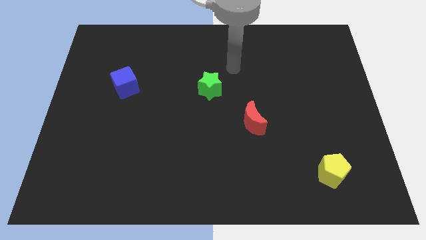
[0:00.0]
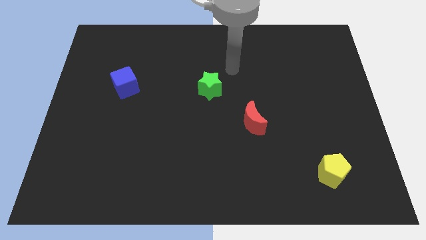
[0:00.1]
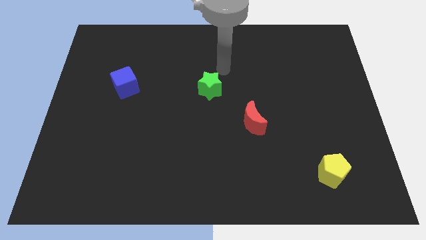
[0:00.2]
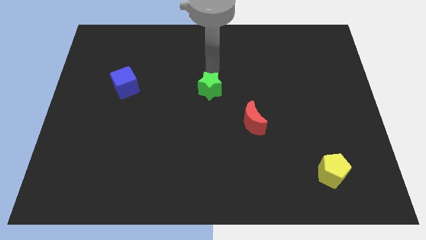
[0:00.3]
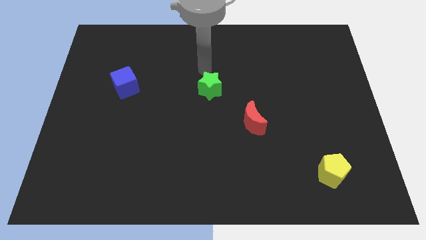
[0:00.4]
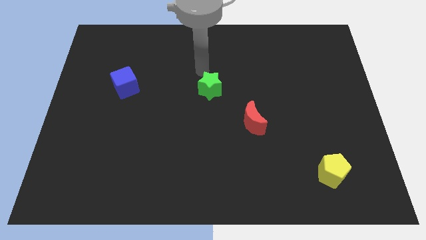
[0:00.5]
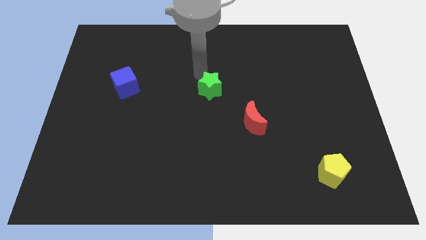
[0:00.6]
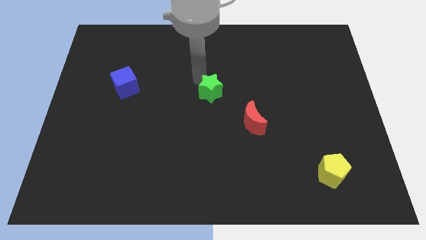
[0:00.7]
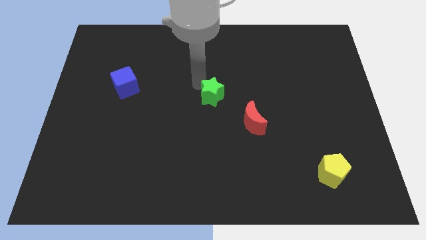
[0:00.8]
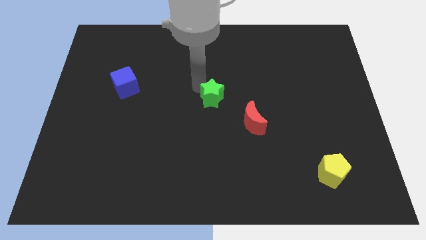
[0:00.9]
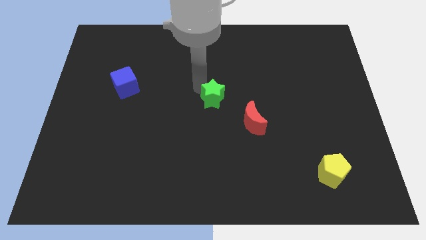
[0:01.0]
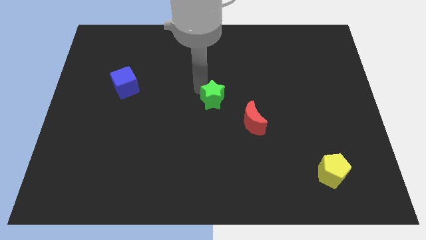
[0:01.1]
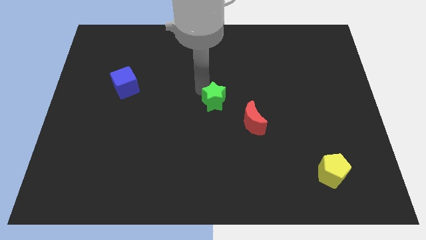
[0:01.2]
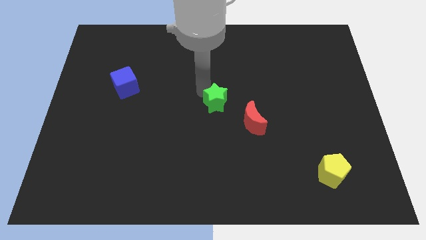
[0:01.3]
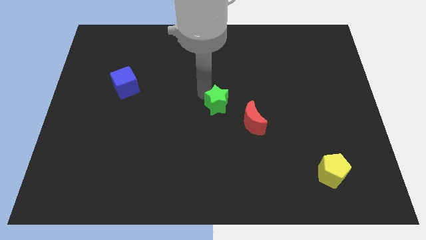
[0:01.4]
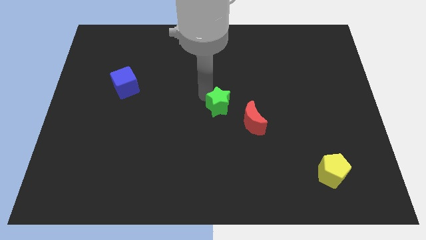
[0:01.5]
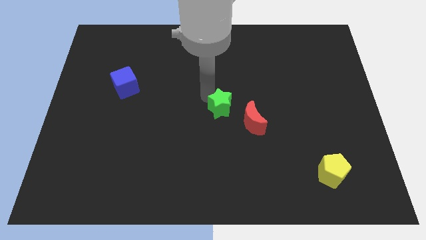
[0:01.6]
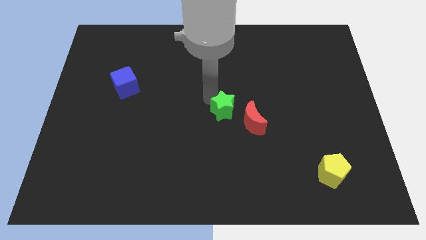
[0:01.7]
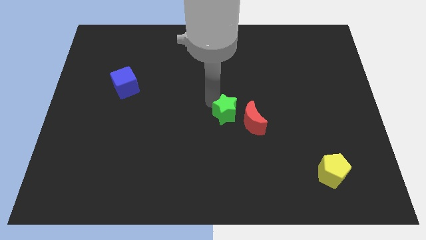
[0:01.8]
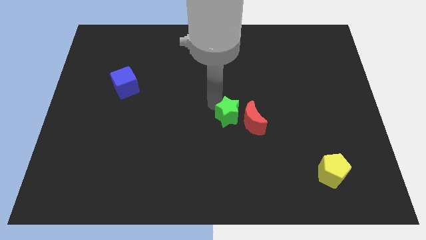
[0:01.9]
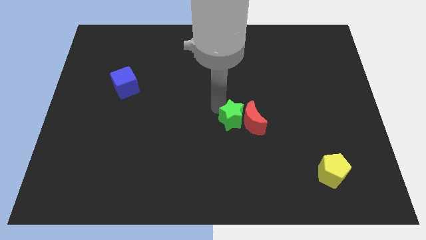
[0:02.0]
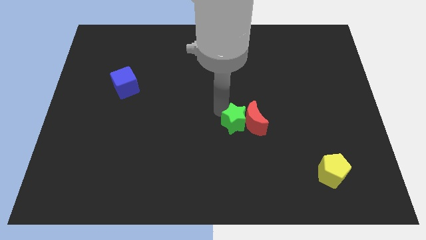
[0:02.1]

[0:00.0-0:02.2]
slide the green star to the moon

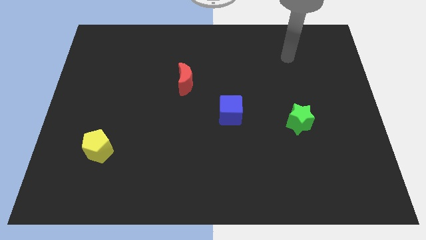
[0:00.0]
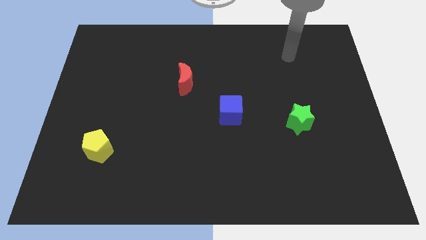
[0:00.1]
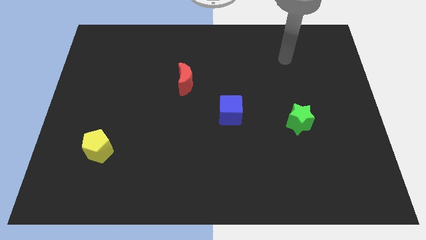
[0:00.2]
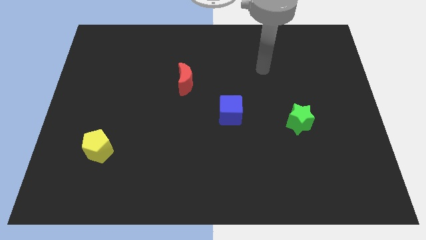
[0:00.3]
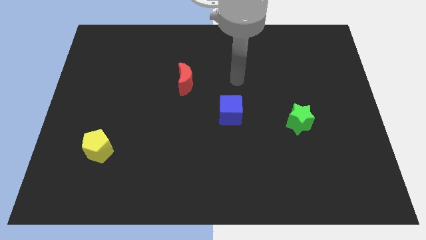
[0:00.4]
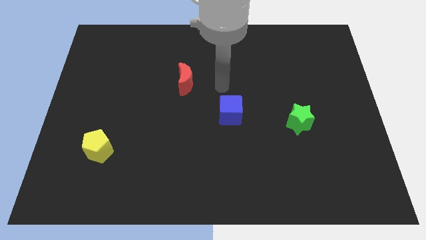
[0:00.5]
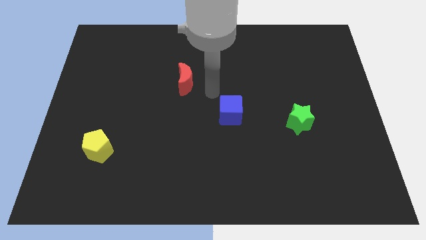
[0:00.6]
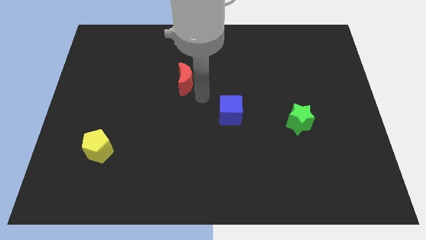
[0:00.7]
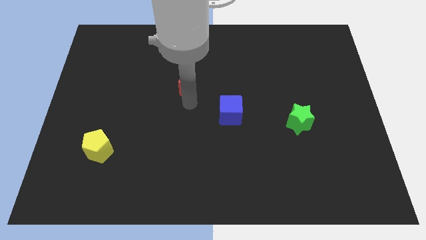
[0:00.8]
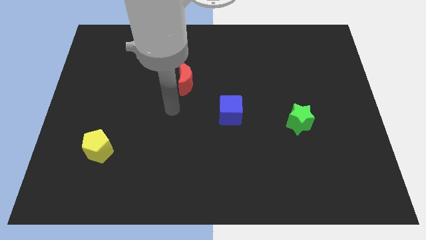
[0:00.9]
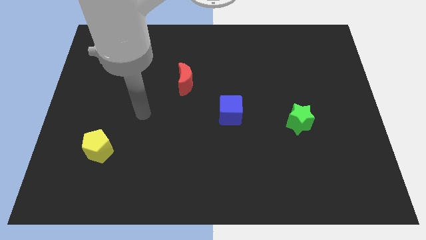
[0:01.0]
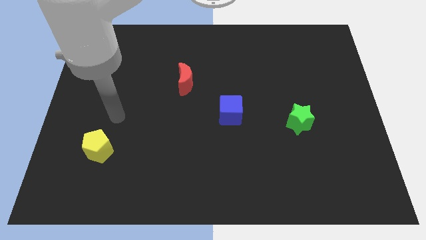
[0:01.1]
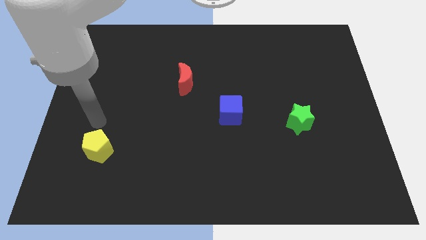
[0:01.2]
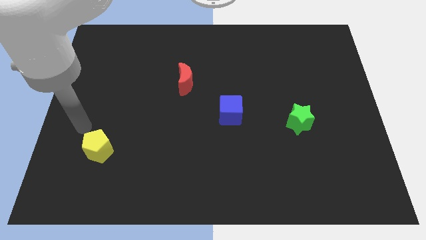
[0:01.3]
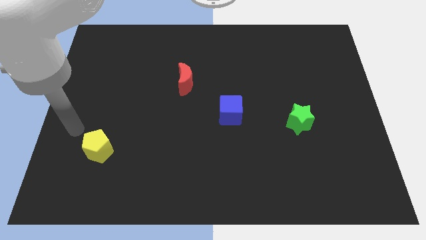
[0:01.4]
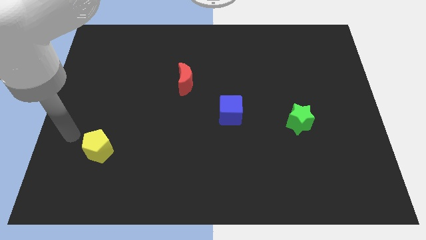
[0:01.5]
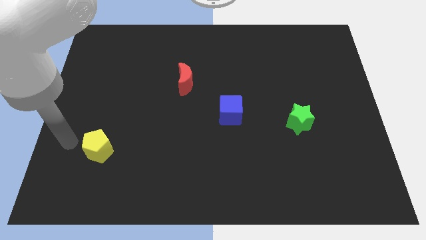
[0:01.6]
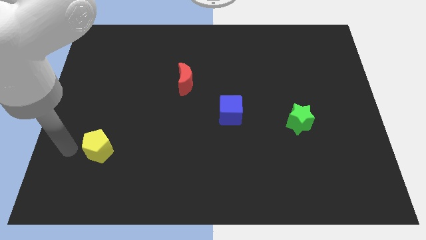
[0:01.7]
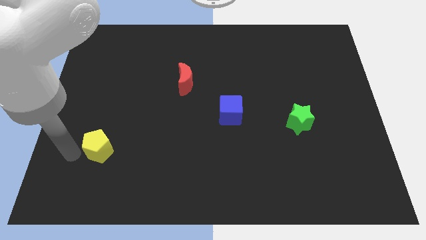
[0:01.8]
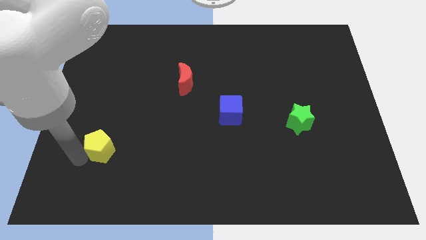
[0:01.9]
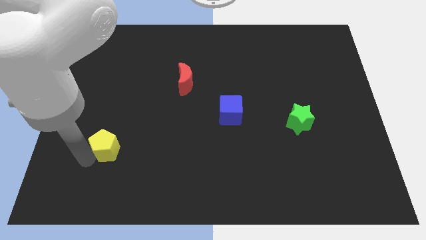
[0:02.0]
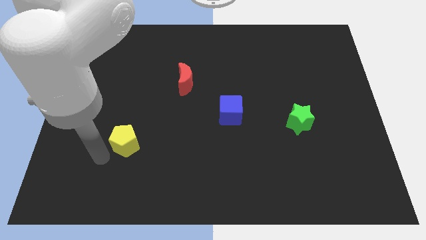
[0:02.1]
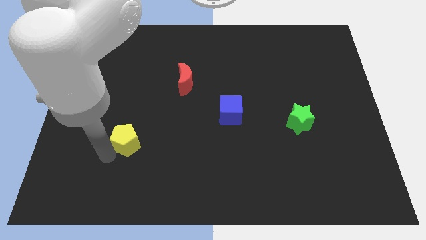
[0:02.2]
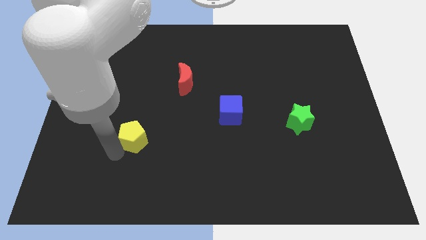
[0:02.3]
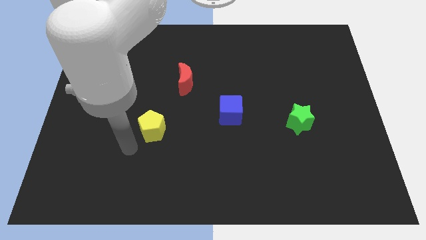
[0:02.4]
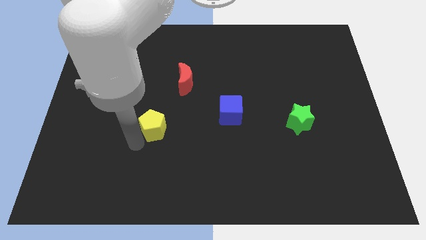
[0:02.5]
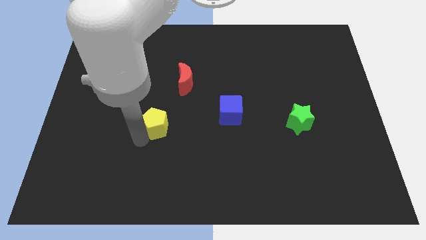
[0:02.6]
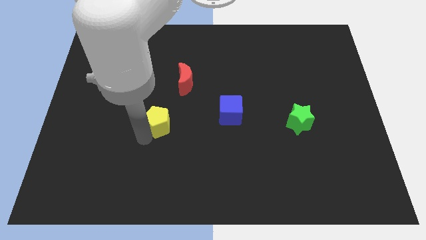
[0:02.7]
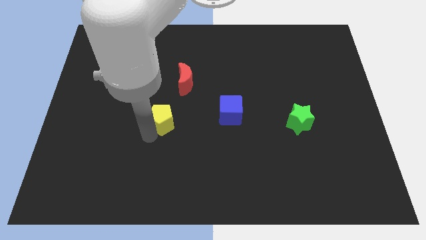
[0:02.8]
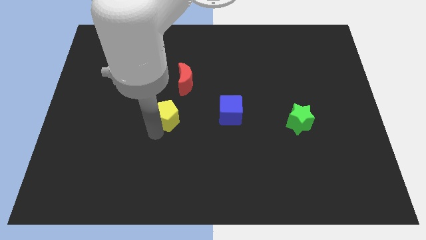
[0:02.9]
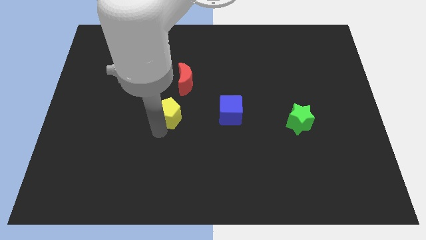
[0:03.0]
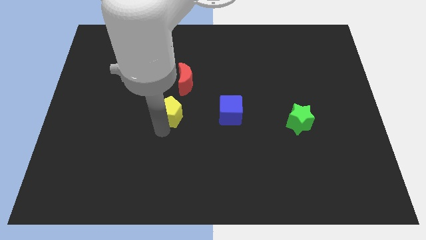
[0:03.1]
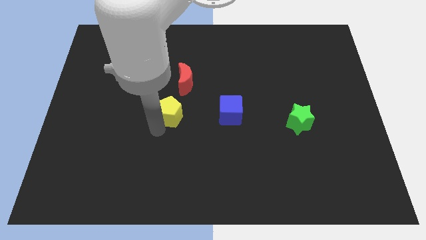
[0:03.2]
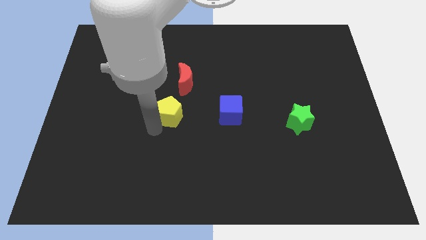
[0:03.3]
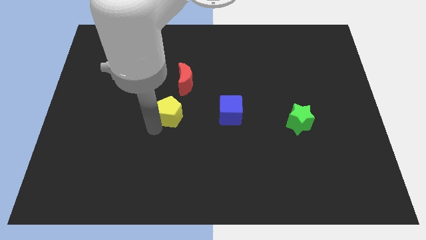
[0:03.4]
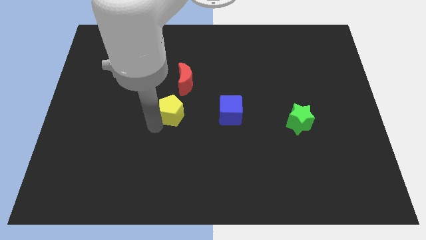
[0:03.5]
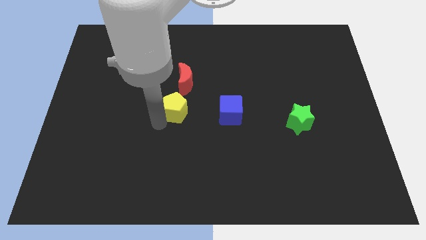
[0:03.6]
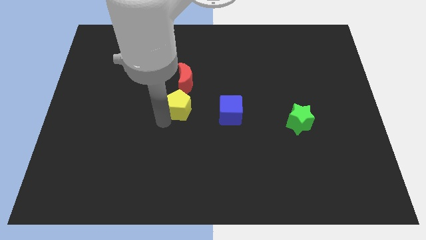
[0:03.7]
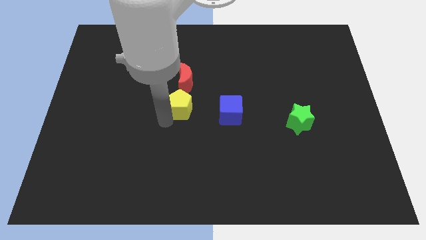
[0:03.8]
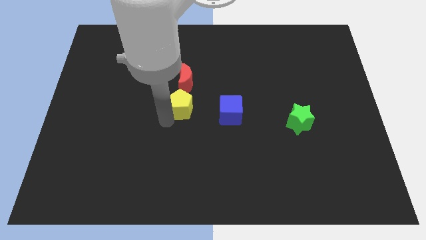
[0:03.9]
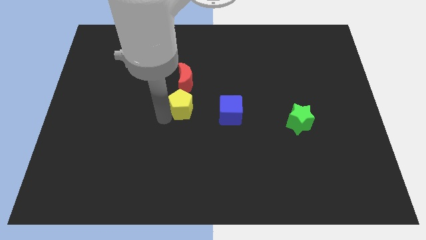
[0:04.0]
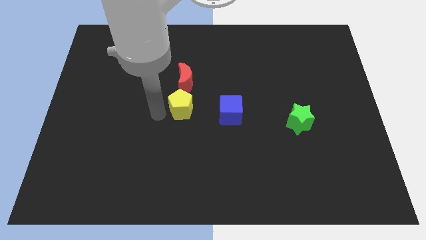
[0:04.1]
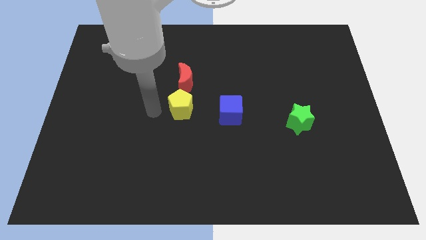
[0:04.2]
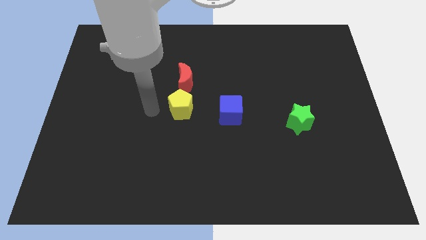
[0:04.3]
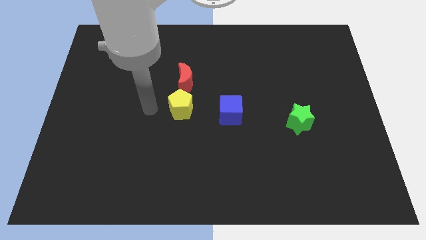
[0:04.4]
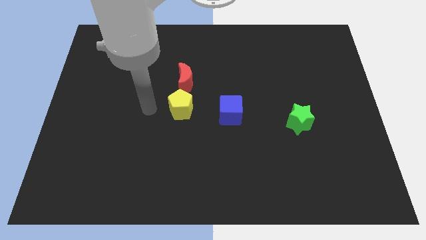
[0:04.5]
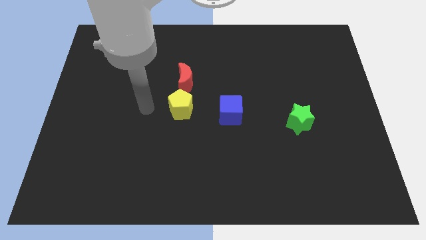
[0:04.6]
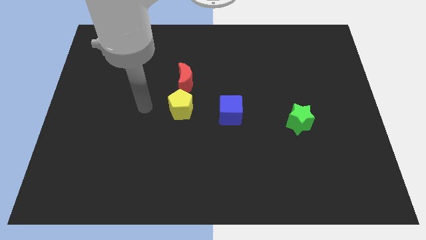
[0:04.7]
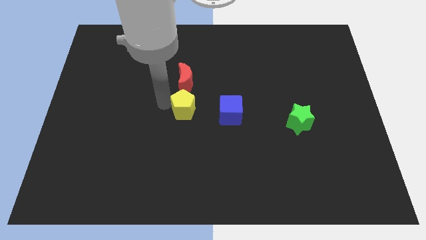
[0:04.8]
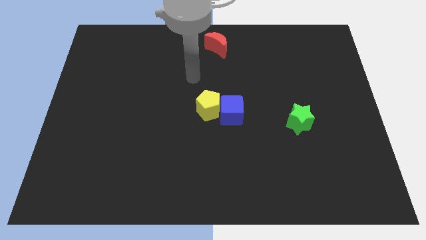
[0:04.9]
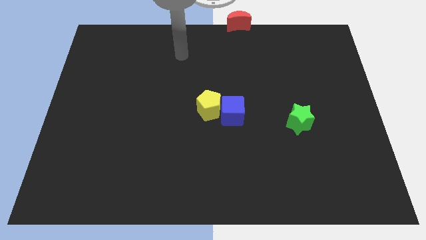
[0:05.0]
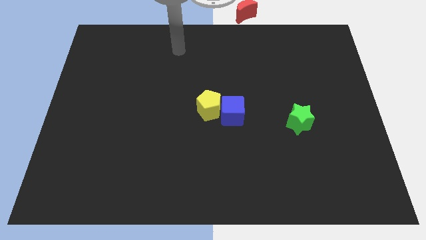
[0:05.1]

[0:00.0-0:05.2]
push the pentagon towards the cube

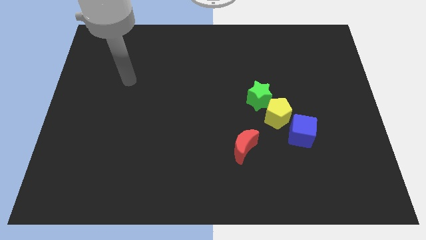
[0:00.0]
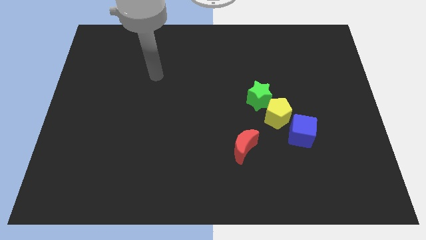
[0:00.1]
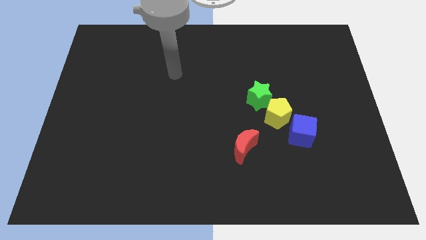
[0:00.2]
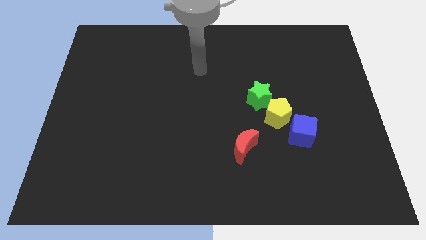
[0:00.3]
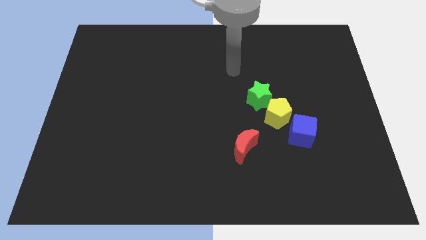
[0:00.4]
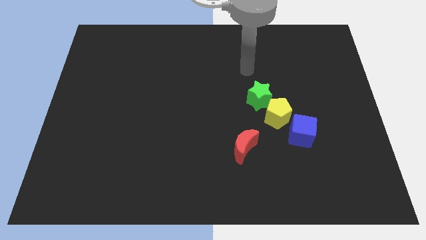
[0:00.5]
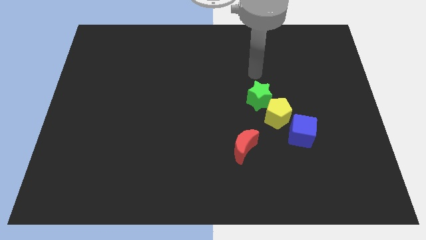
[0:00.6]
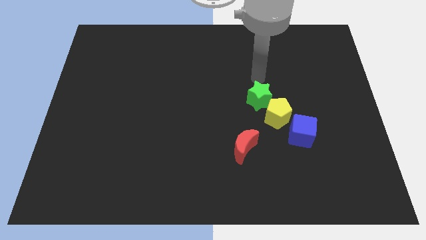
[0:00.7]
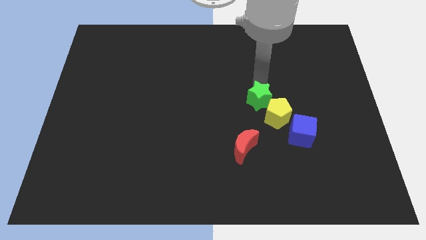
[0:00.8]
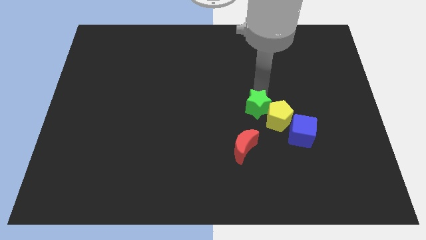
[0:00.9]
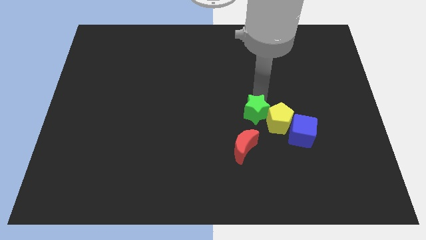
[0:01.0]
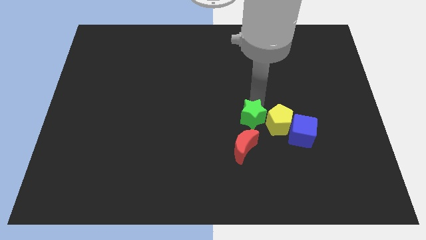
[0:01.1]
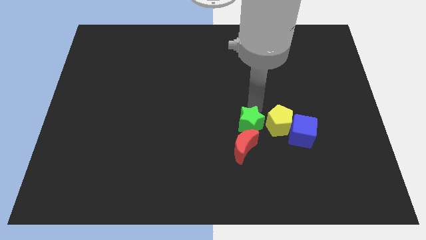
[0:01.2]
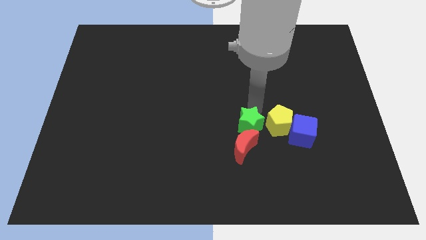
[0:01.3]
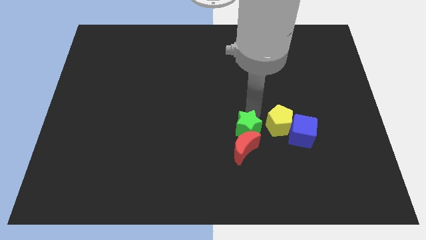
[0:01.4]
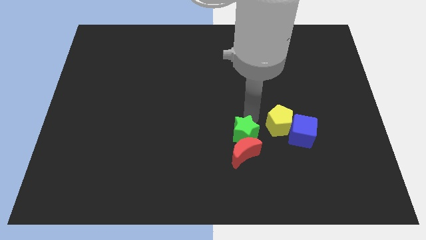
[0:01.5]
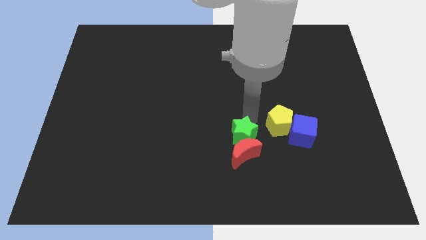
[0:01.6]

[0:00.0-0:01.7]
put the star next to the red moon
